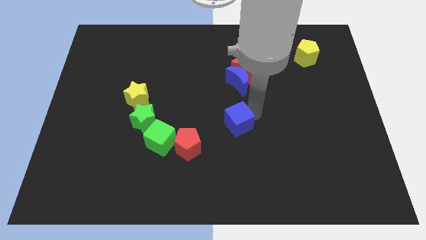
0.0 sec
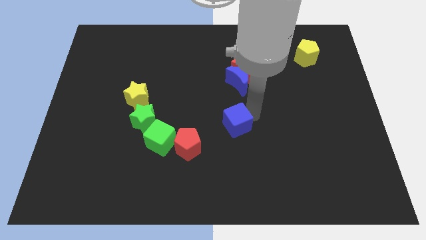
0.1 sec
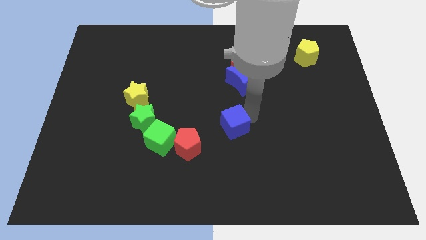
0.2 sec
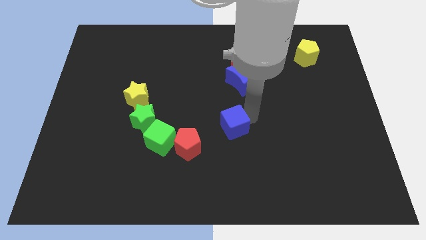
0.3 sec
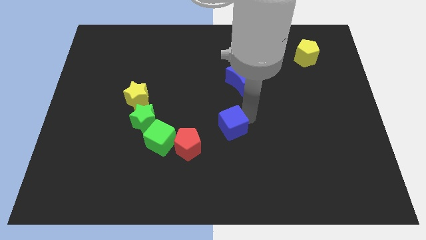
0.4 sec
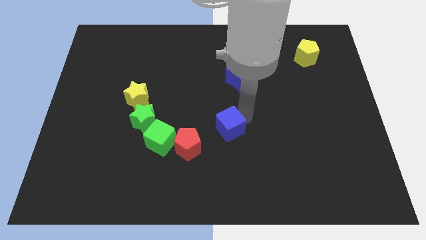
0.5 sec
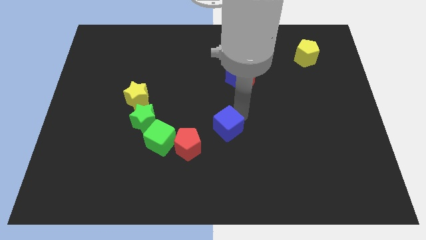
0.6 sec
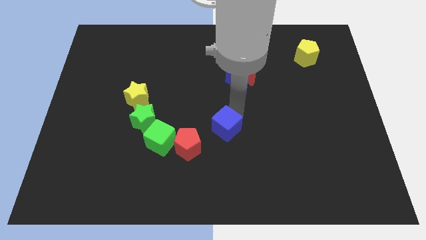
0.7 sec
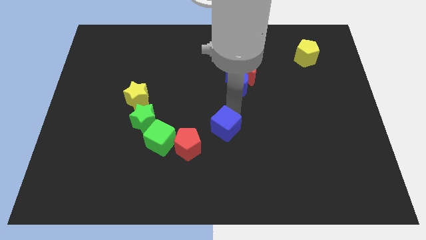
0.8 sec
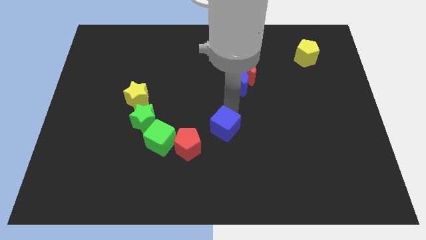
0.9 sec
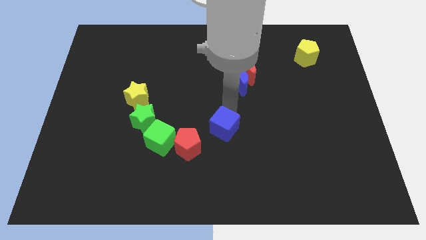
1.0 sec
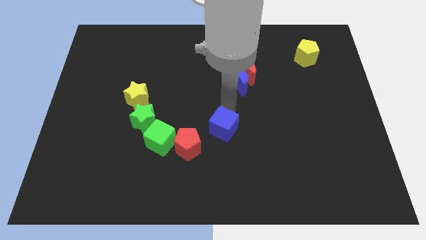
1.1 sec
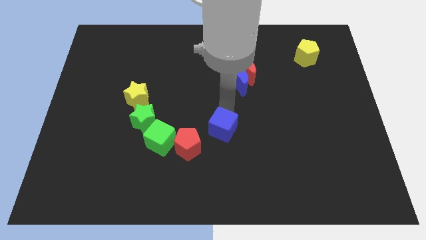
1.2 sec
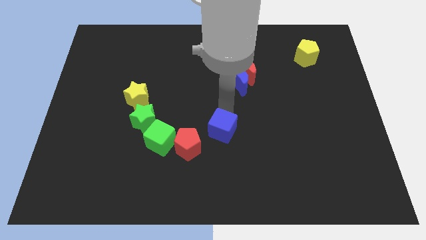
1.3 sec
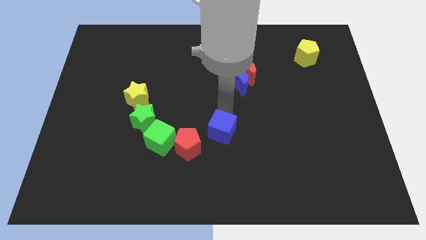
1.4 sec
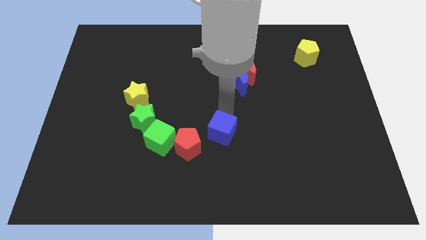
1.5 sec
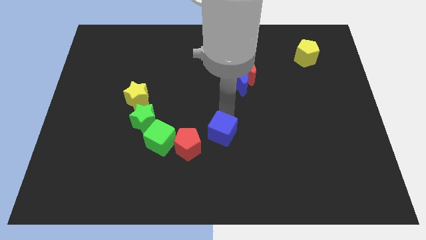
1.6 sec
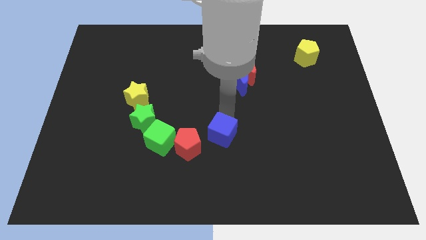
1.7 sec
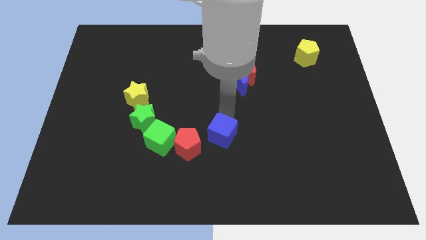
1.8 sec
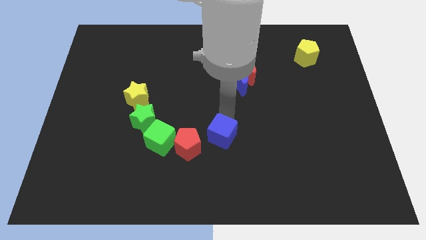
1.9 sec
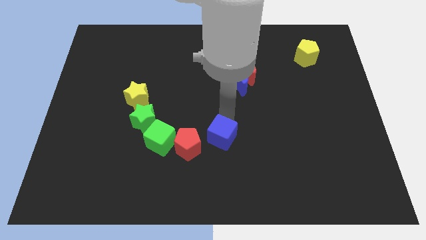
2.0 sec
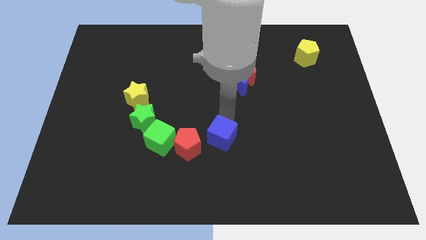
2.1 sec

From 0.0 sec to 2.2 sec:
move the blue cube diagonally top right to the red penatgon

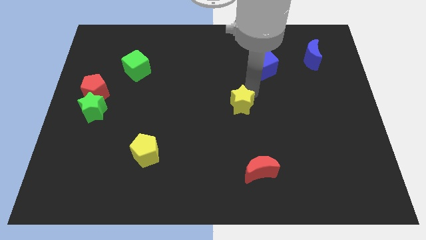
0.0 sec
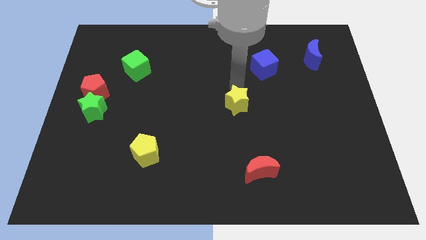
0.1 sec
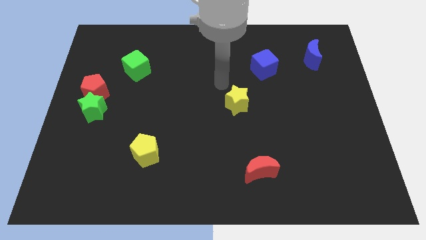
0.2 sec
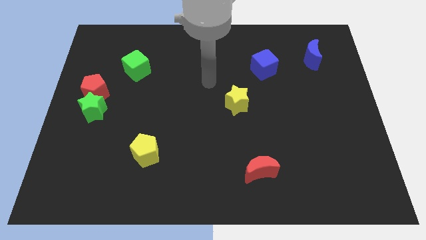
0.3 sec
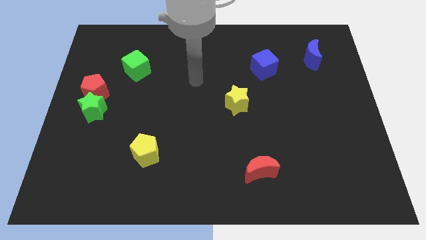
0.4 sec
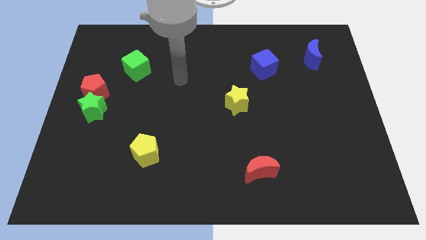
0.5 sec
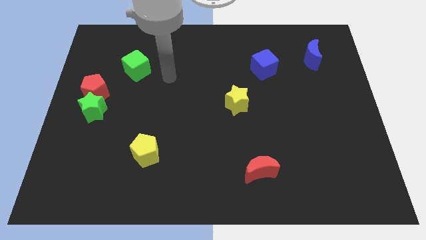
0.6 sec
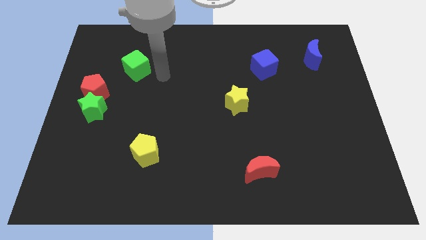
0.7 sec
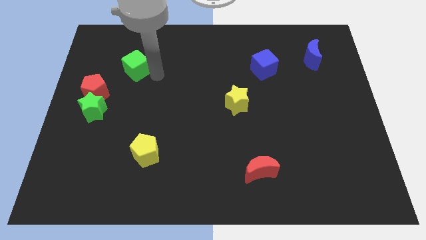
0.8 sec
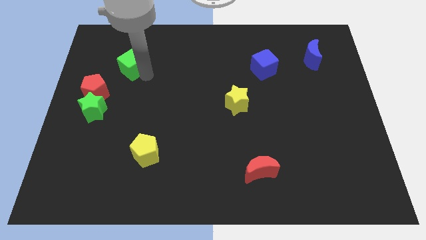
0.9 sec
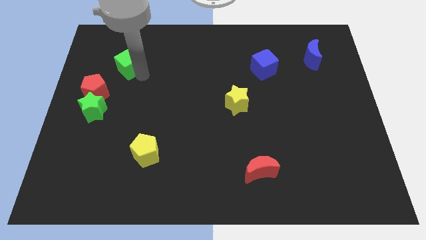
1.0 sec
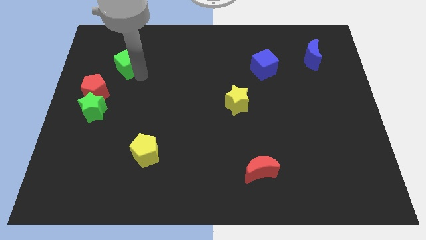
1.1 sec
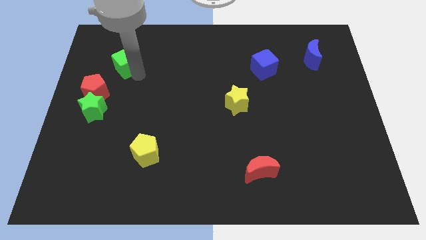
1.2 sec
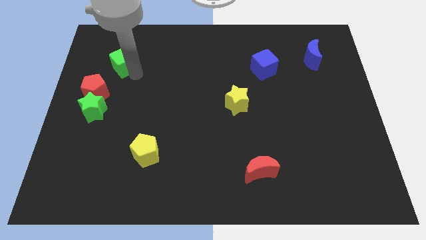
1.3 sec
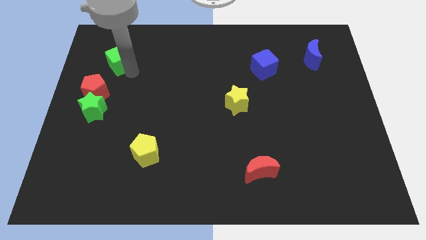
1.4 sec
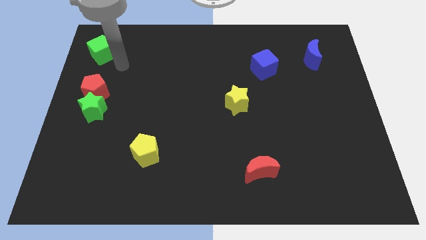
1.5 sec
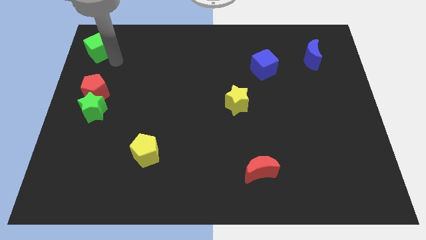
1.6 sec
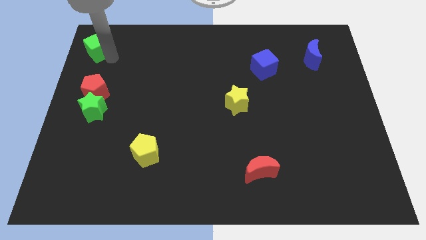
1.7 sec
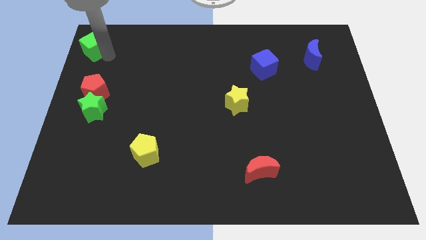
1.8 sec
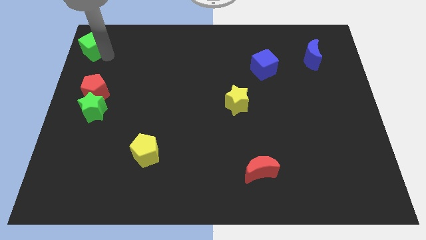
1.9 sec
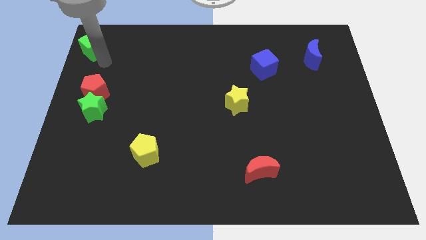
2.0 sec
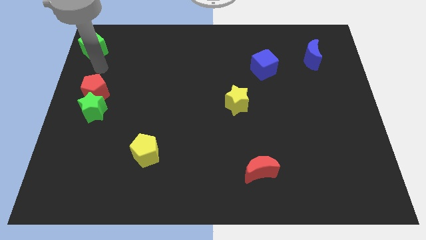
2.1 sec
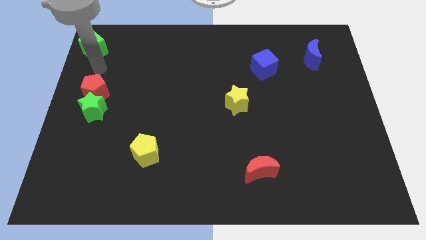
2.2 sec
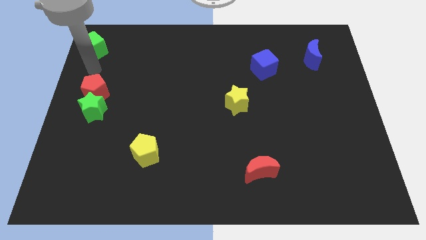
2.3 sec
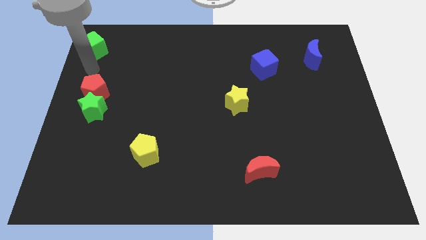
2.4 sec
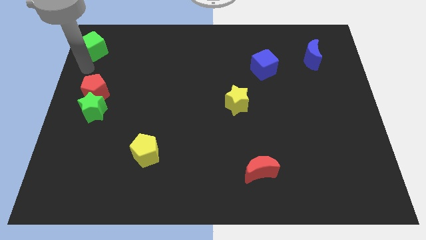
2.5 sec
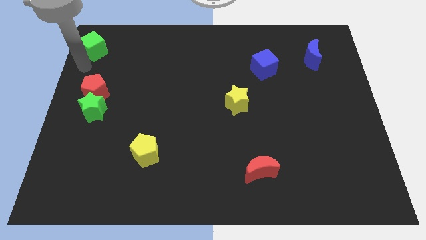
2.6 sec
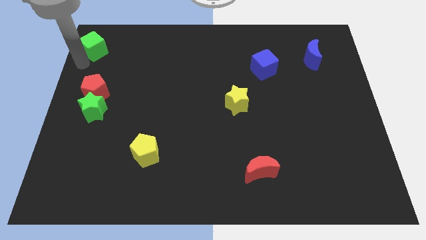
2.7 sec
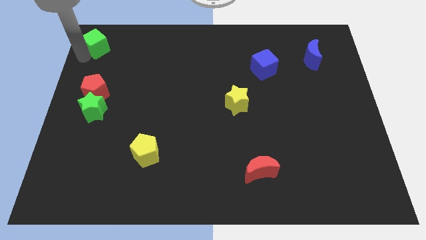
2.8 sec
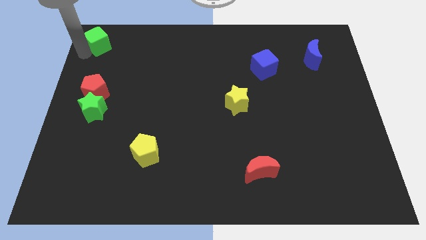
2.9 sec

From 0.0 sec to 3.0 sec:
place green cube above red pentagon

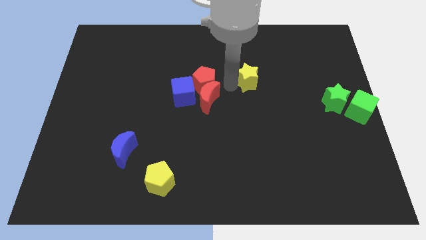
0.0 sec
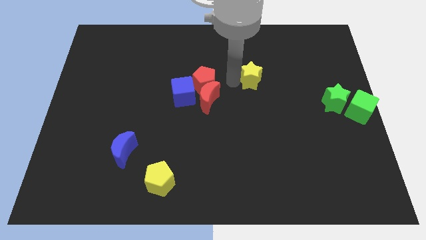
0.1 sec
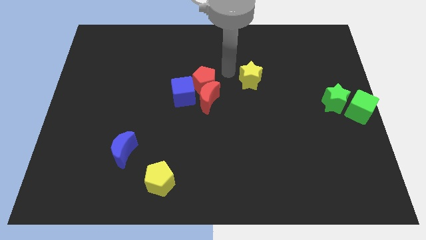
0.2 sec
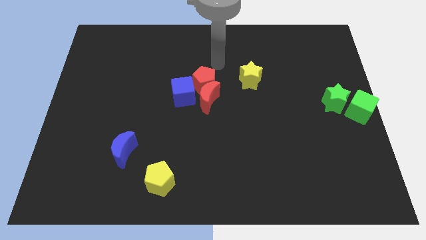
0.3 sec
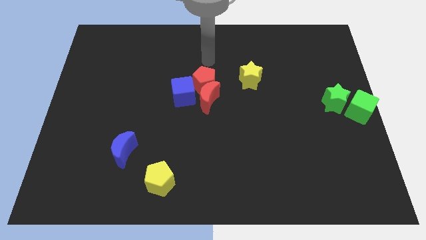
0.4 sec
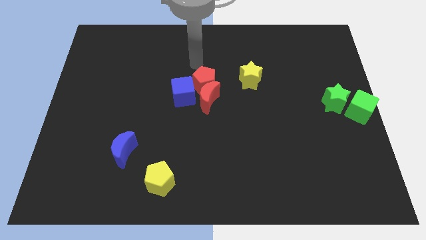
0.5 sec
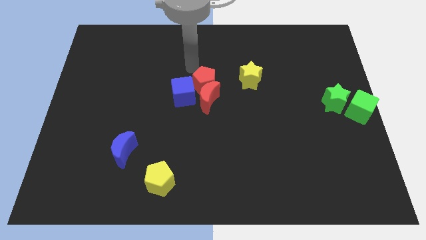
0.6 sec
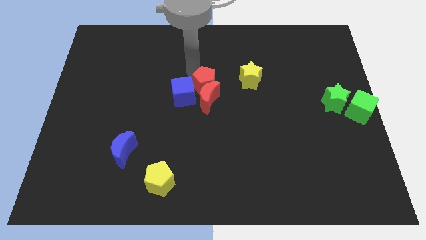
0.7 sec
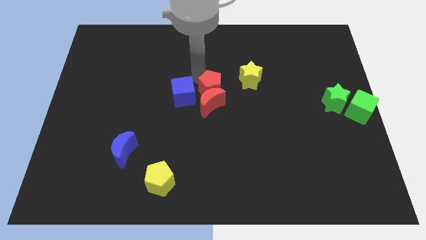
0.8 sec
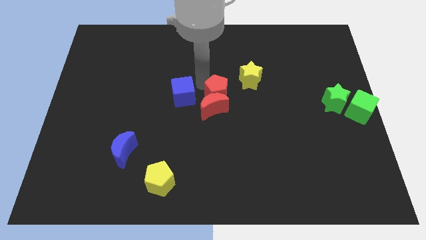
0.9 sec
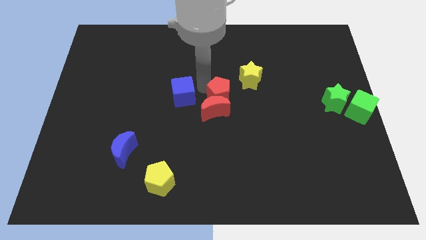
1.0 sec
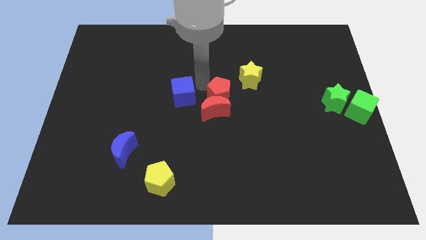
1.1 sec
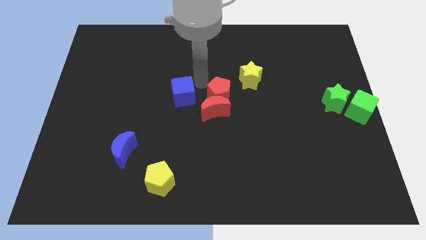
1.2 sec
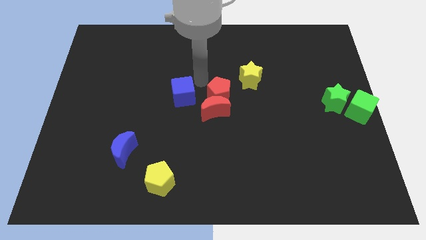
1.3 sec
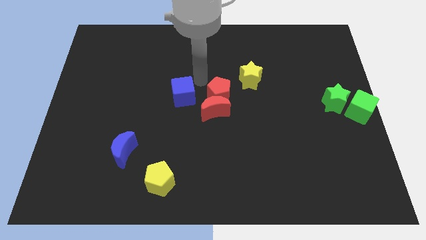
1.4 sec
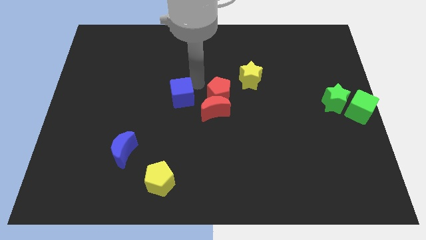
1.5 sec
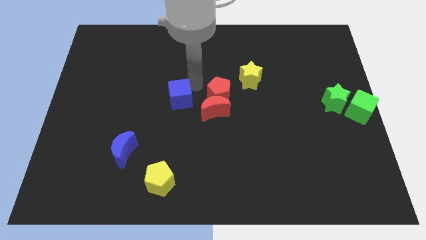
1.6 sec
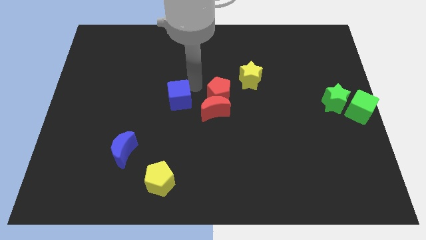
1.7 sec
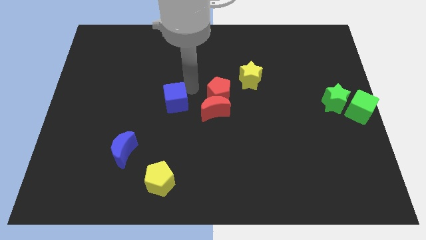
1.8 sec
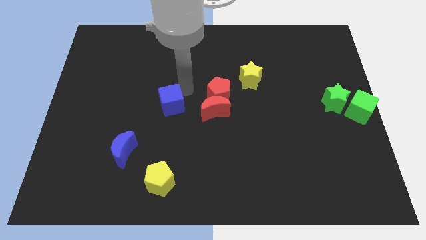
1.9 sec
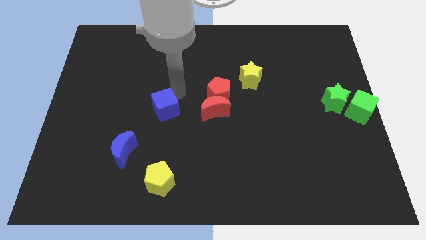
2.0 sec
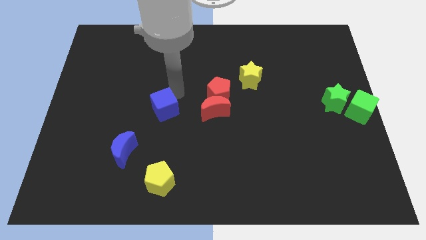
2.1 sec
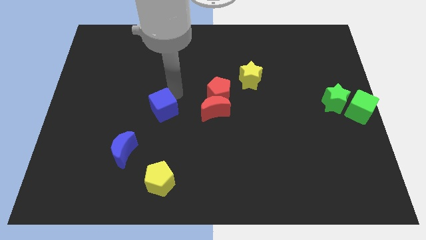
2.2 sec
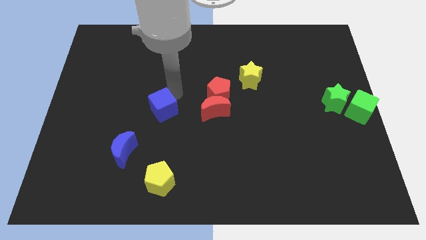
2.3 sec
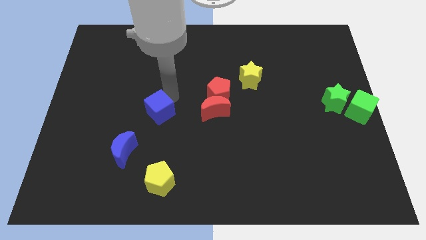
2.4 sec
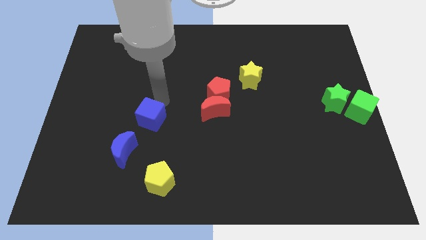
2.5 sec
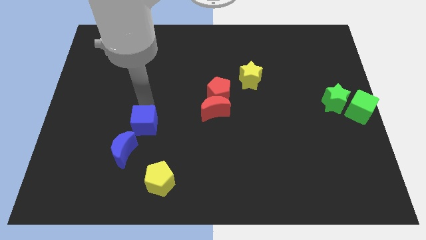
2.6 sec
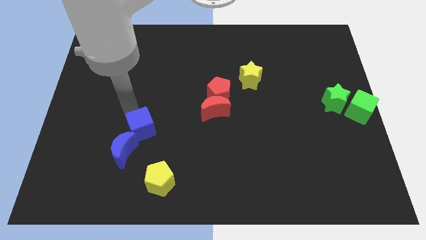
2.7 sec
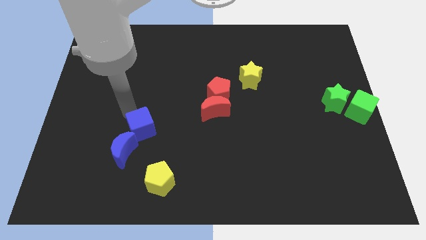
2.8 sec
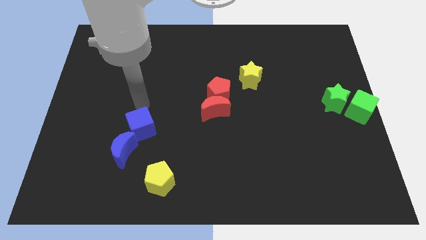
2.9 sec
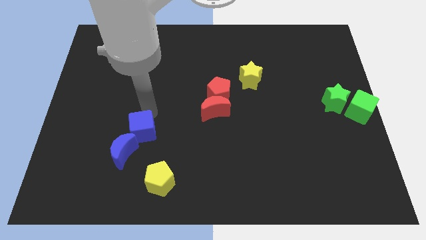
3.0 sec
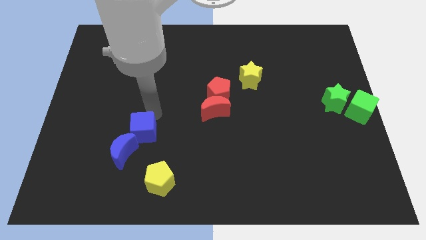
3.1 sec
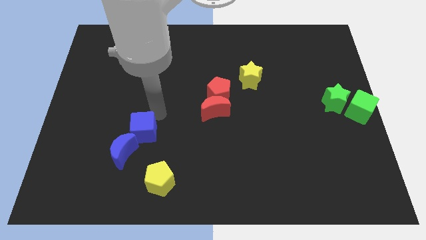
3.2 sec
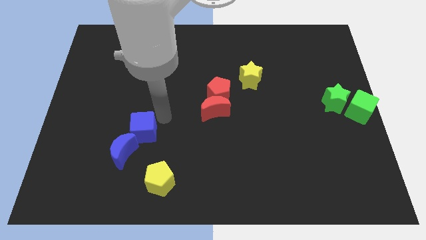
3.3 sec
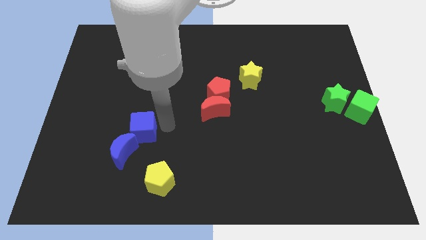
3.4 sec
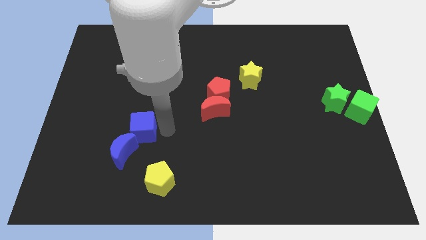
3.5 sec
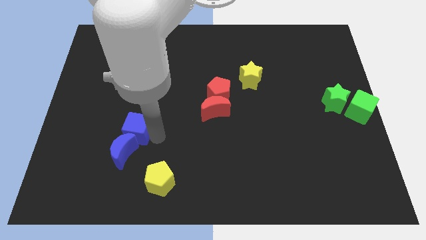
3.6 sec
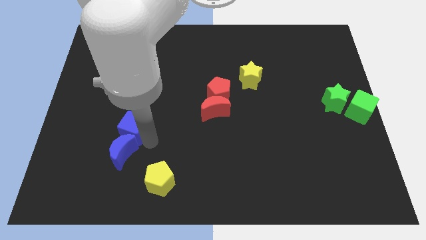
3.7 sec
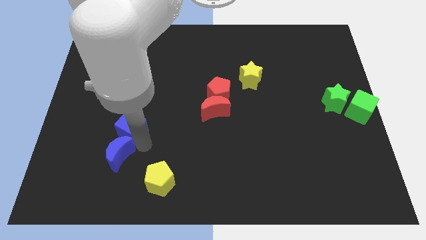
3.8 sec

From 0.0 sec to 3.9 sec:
separate the red blocks and the blue blocks
